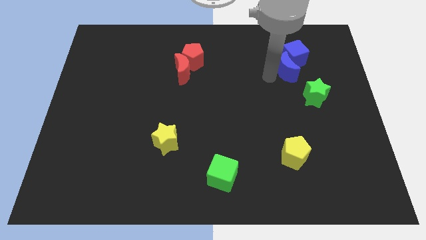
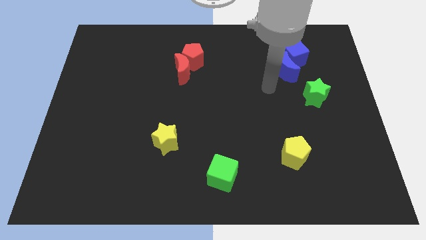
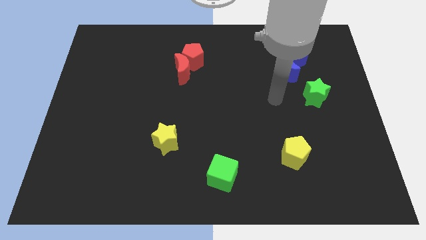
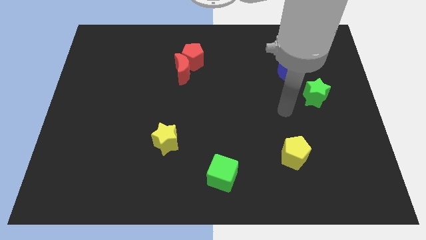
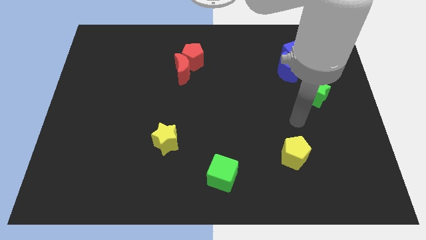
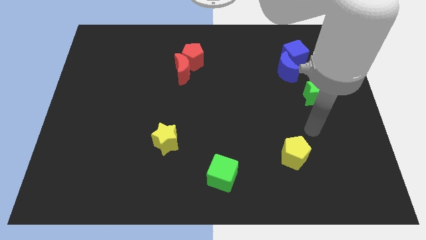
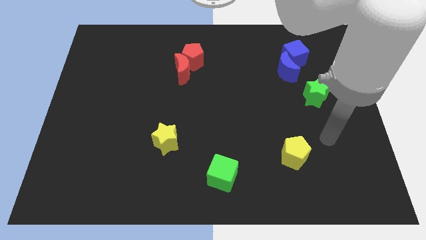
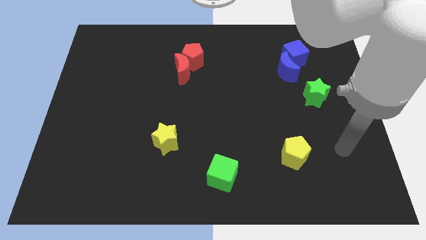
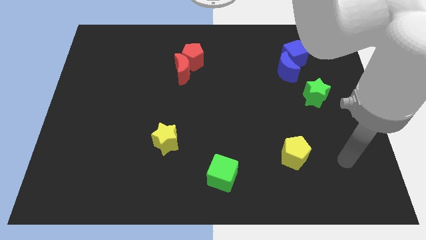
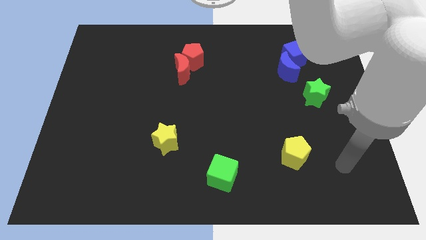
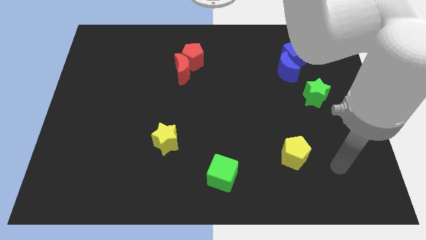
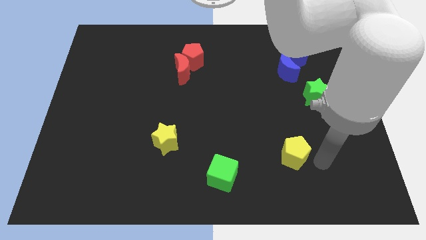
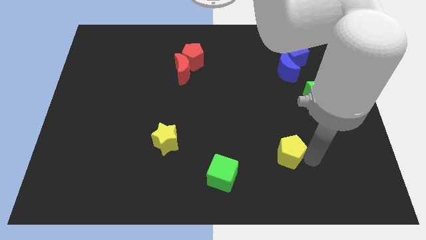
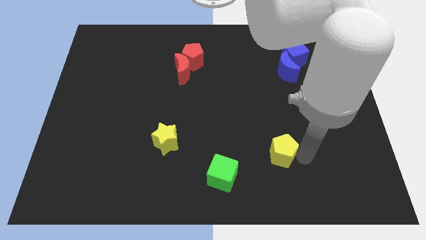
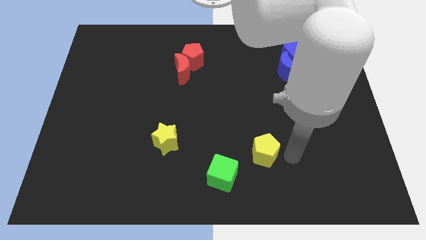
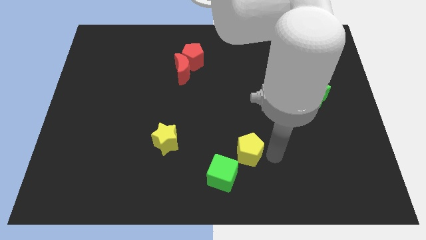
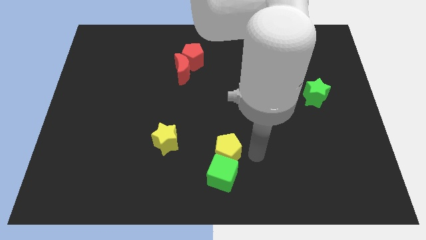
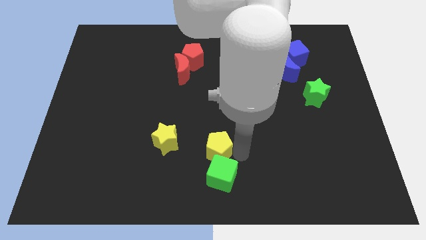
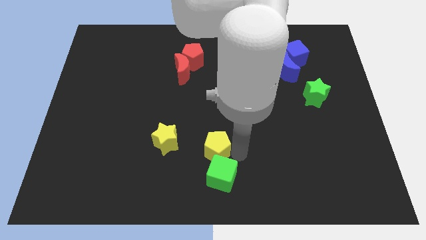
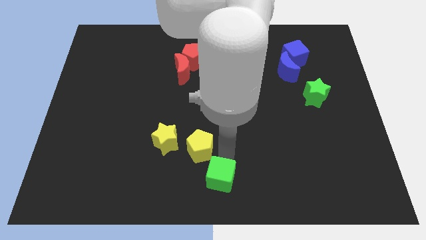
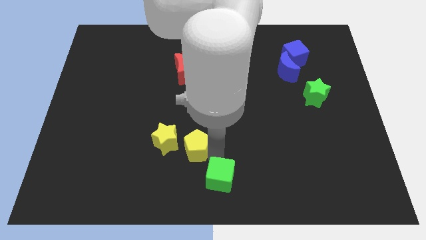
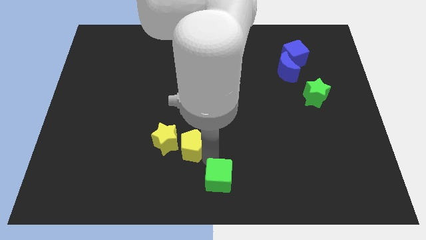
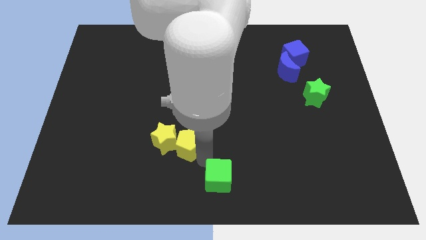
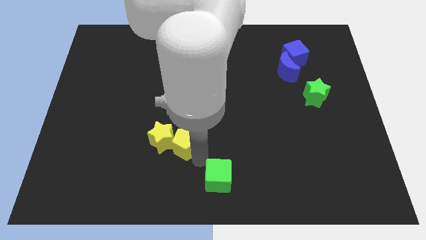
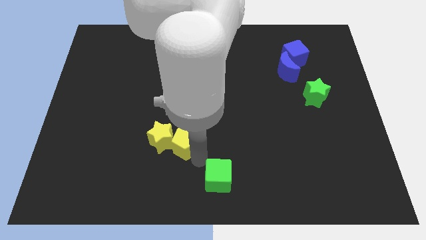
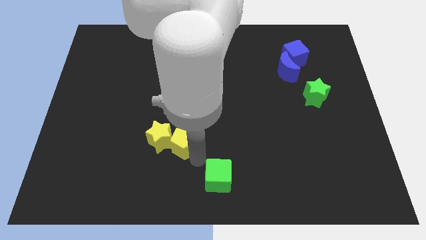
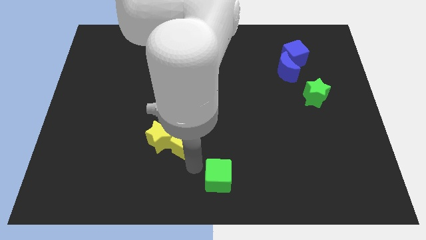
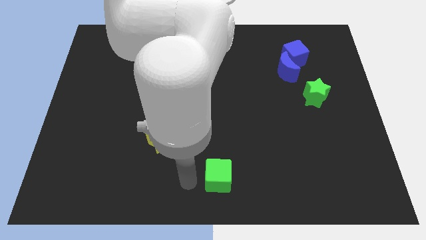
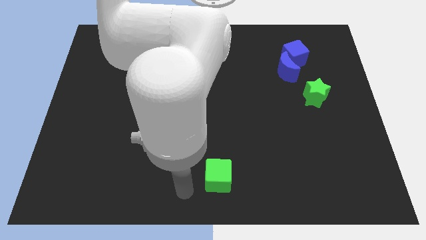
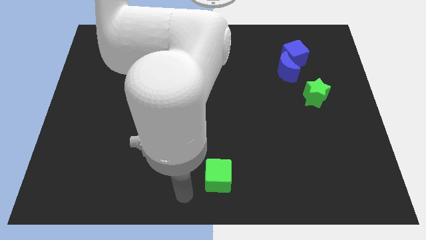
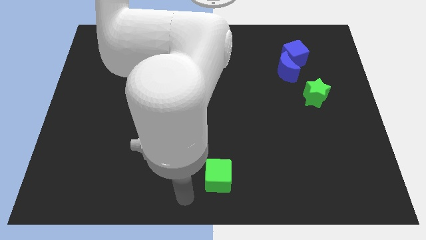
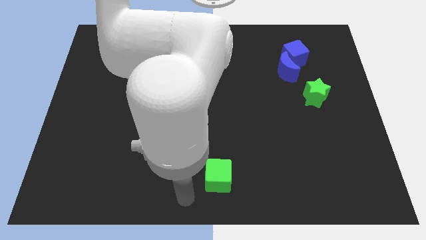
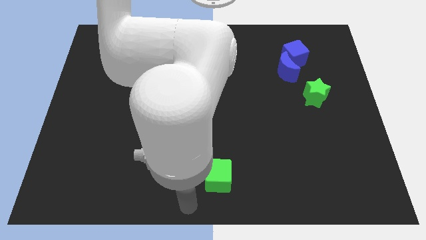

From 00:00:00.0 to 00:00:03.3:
place yellow pentagon to the right of yellow star

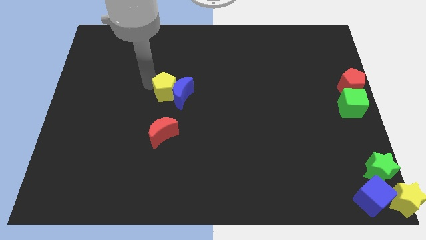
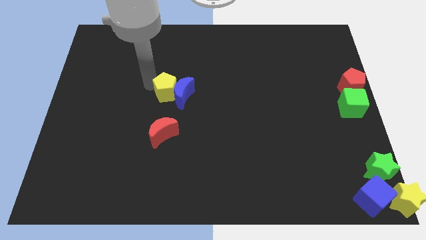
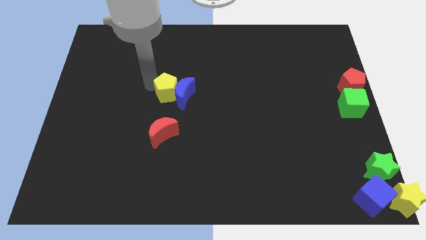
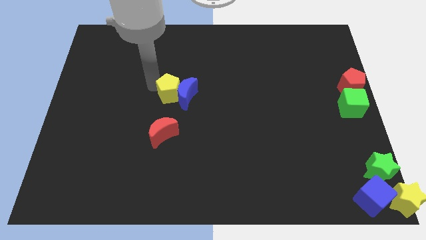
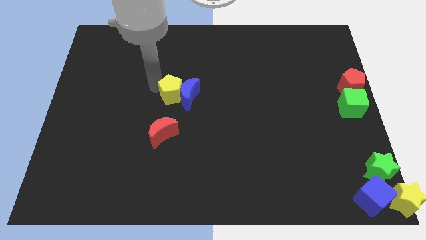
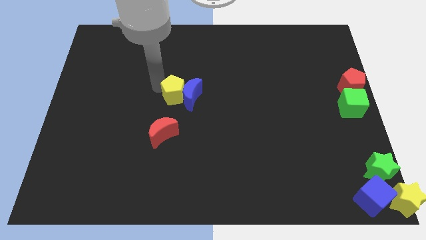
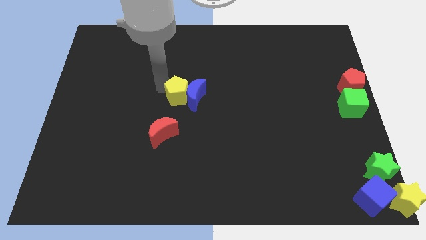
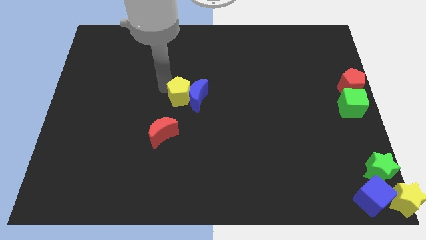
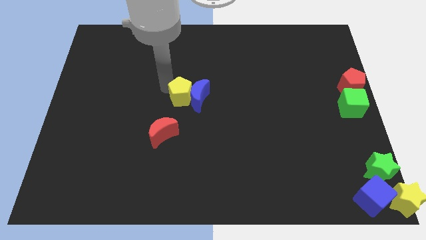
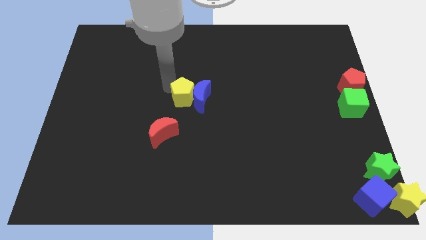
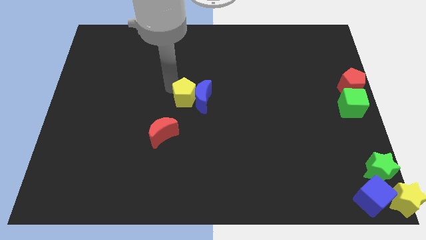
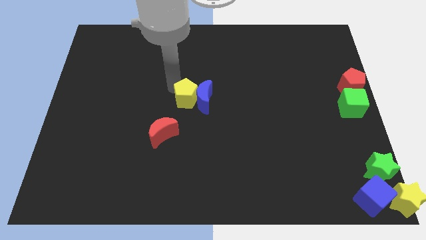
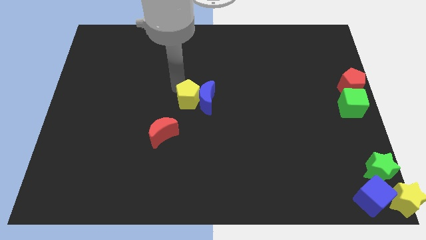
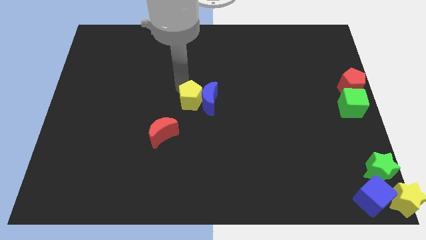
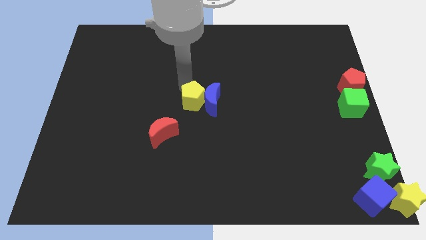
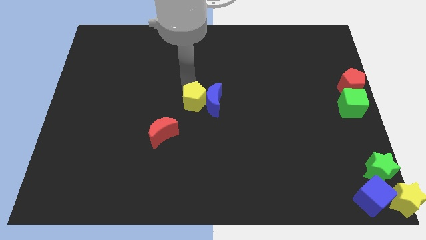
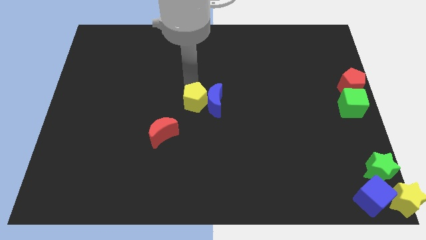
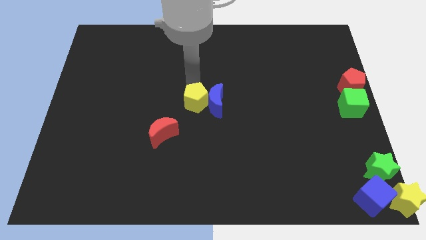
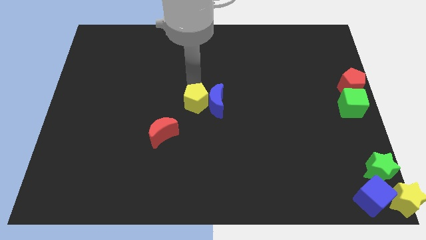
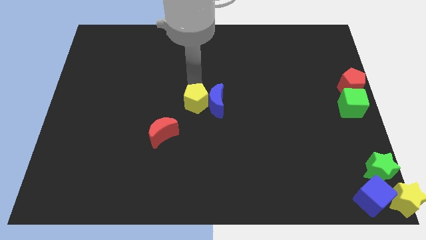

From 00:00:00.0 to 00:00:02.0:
slide the blue moon with yellow pentagon to the center of the board

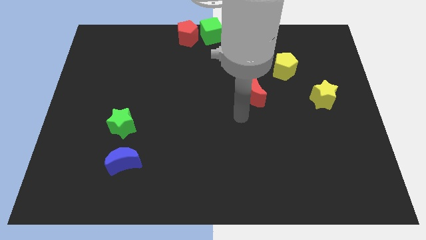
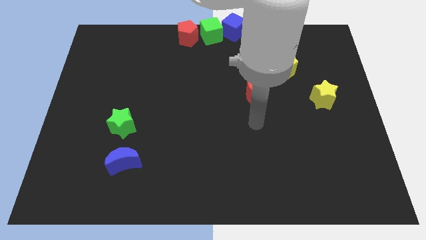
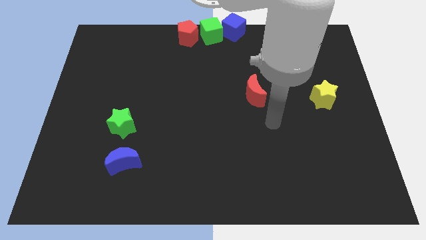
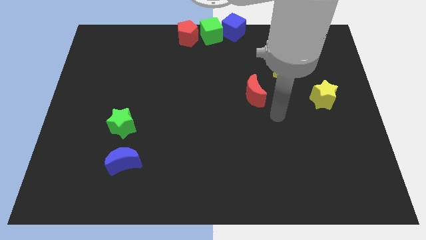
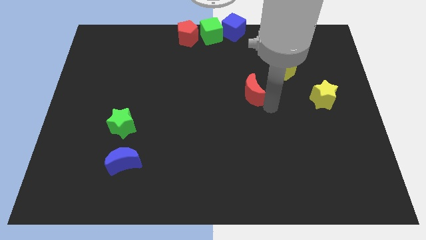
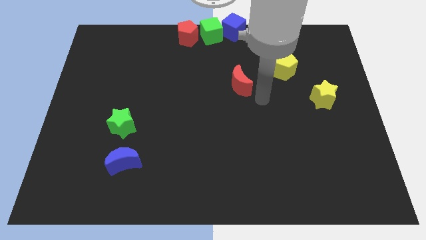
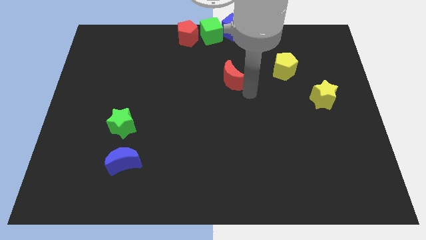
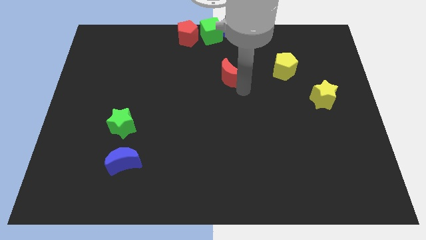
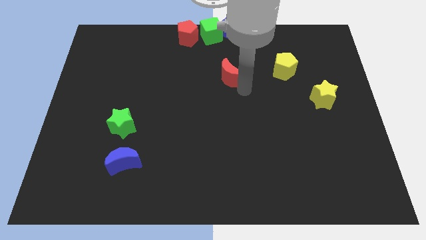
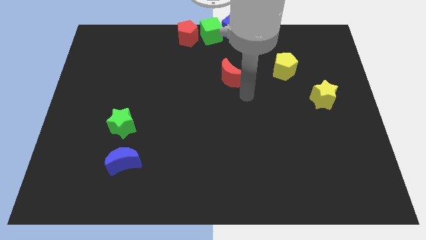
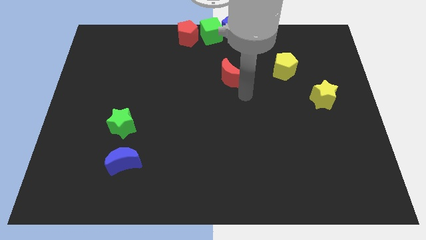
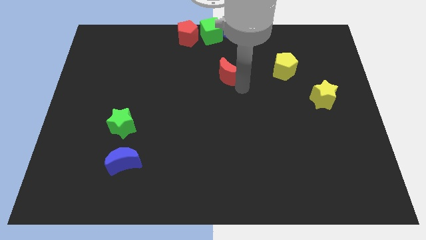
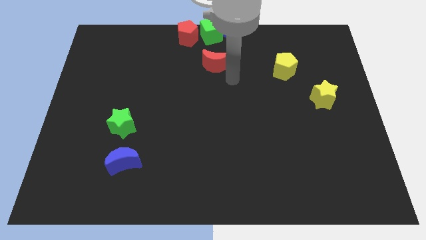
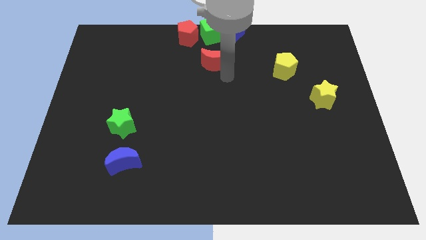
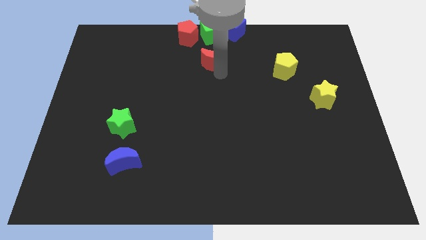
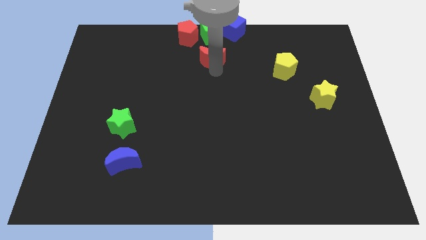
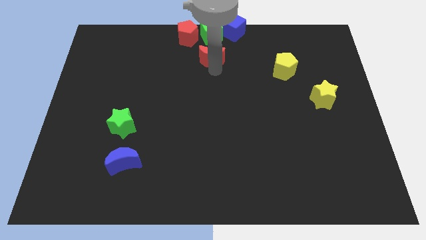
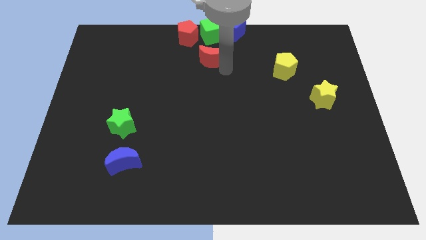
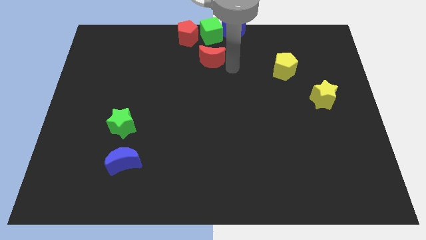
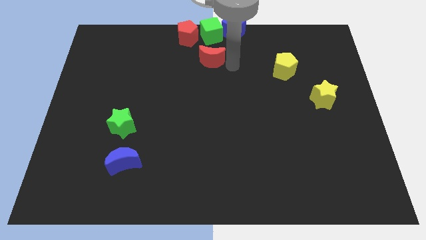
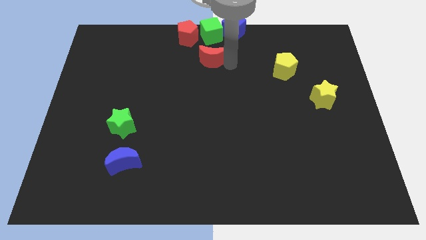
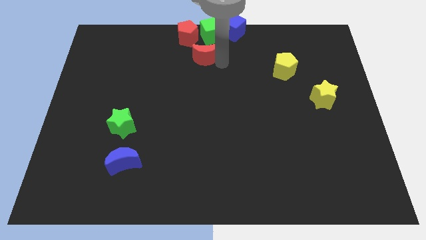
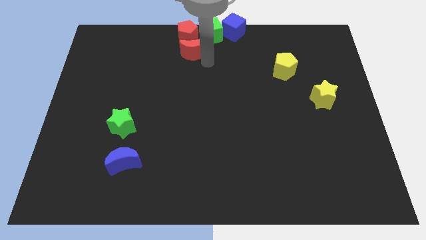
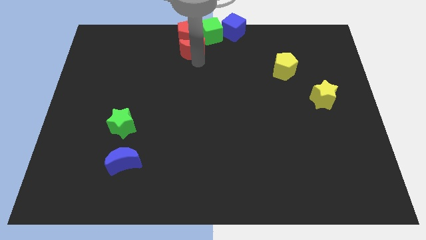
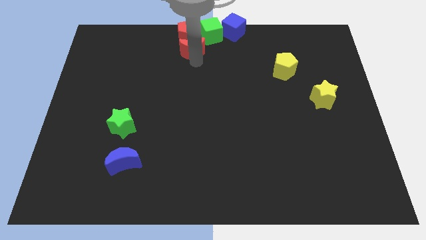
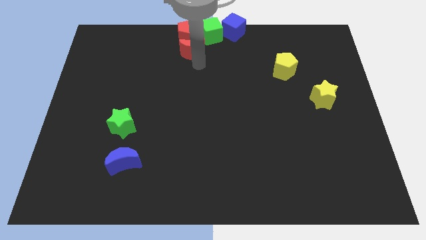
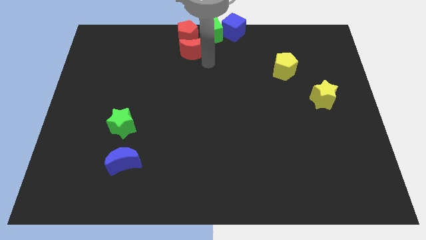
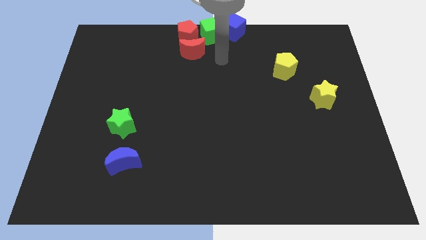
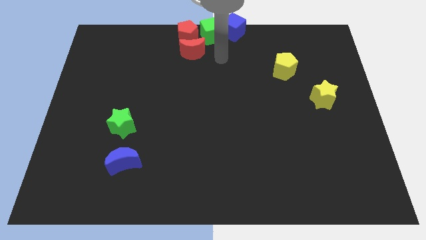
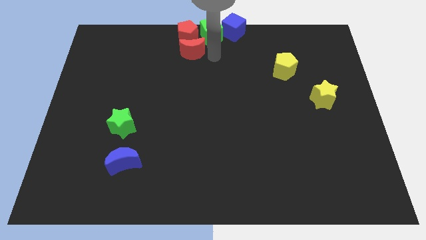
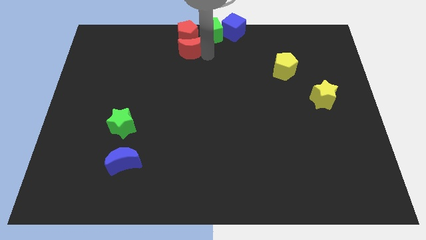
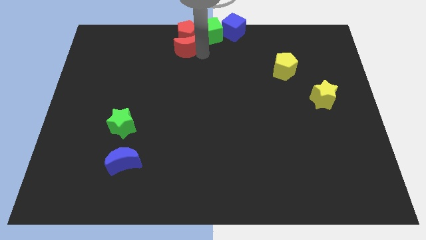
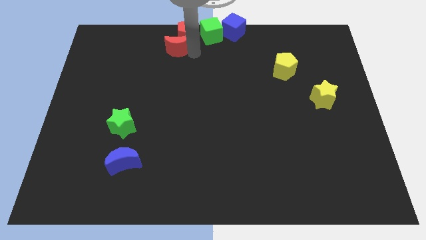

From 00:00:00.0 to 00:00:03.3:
push the red crescent towards the bottom of red pentagon

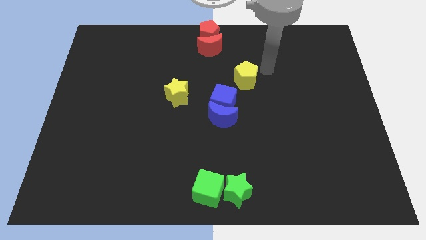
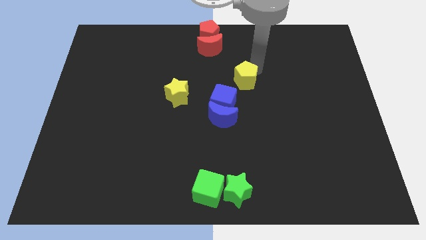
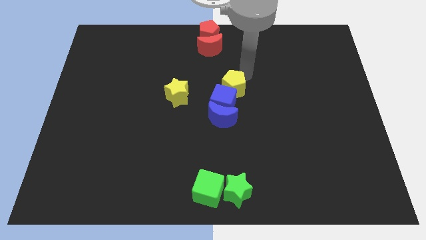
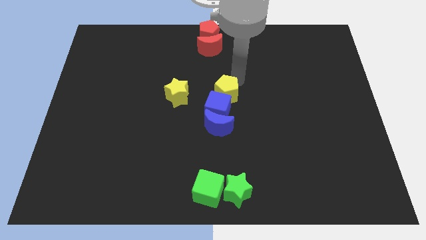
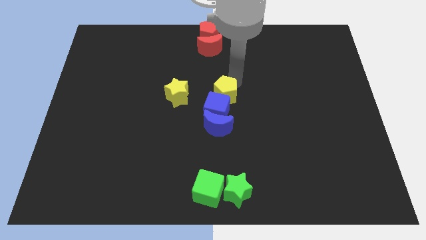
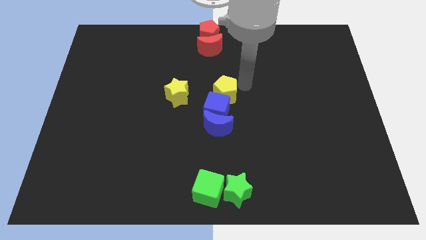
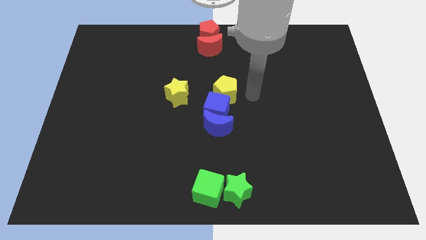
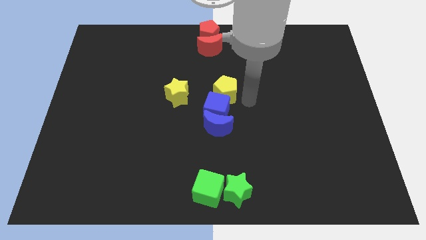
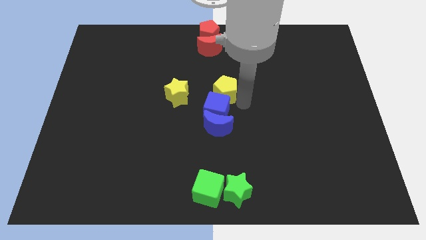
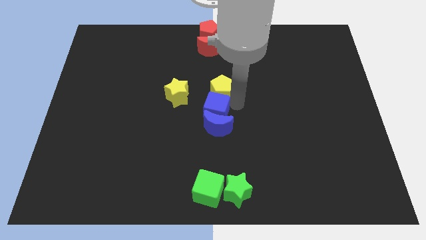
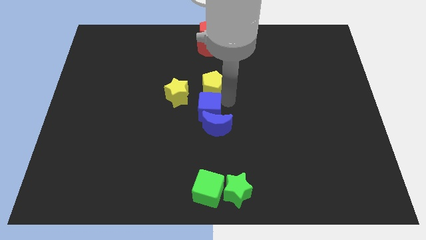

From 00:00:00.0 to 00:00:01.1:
slide the yellow pentagon into the blue cube and blue moon
